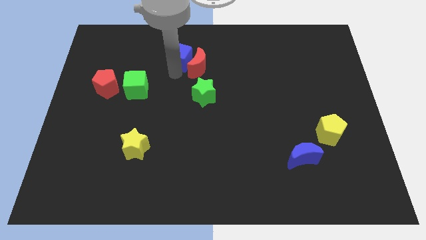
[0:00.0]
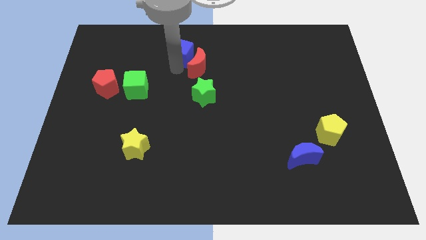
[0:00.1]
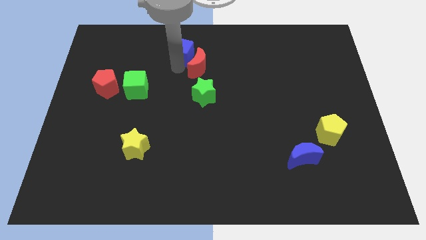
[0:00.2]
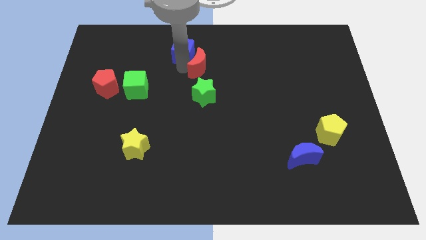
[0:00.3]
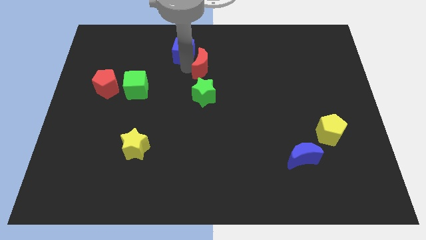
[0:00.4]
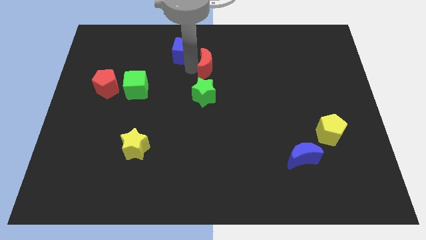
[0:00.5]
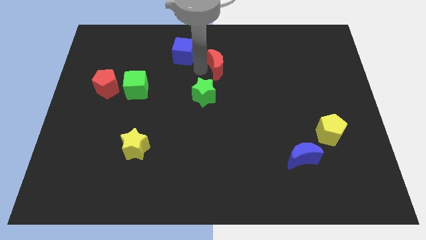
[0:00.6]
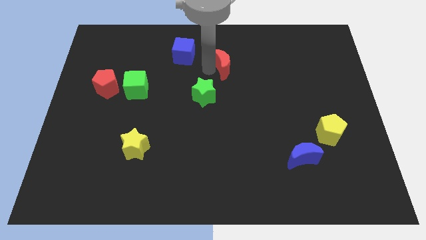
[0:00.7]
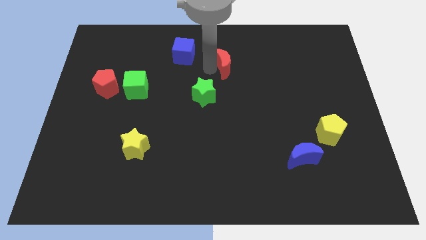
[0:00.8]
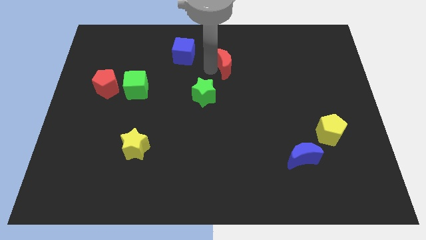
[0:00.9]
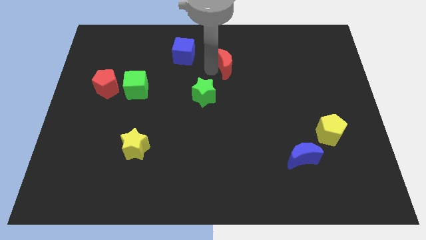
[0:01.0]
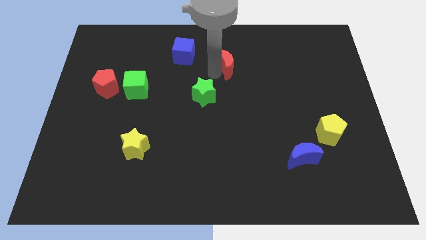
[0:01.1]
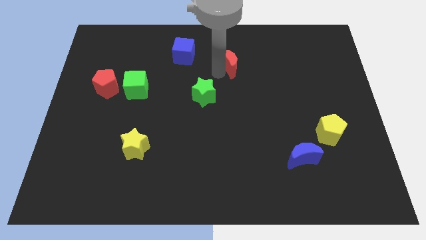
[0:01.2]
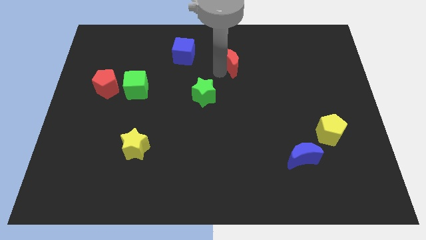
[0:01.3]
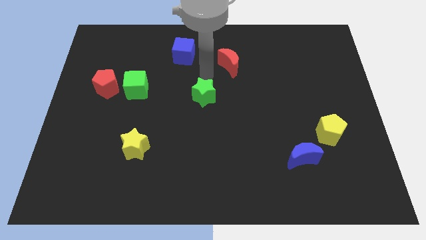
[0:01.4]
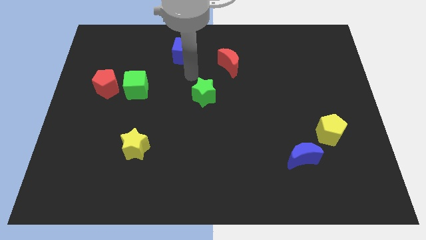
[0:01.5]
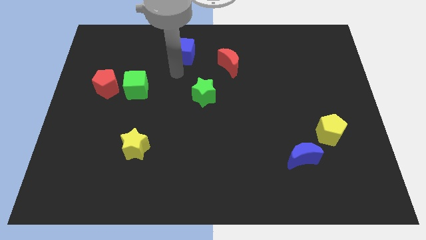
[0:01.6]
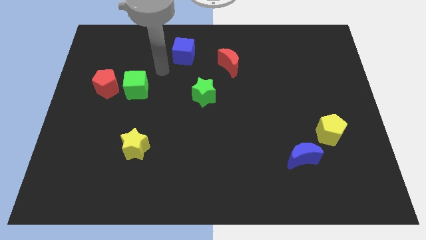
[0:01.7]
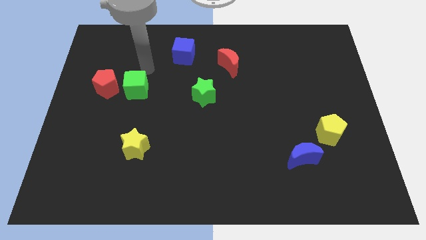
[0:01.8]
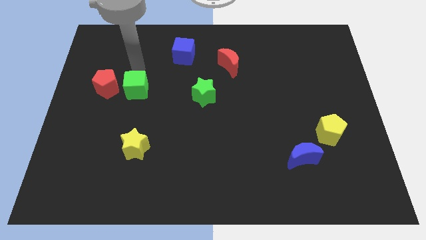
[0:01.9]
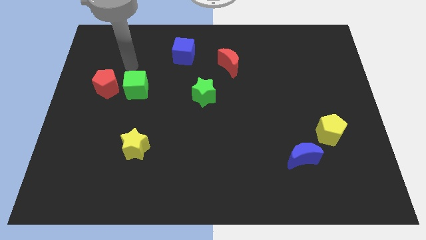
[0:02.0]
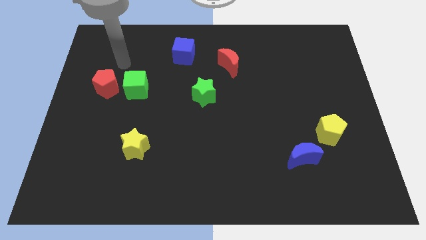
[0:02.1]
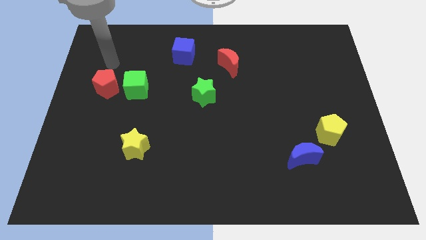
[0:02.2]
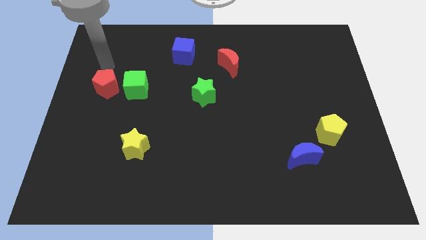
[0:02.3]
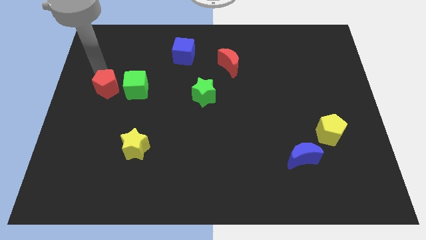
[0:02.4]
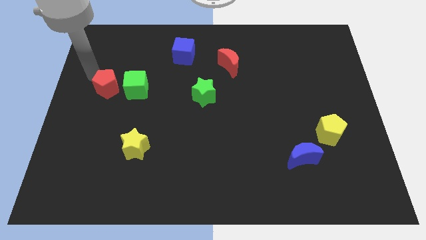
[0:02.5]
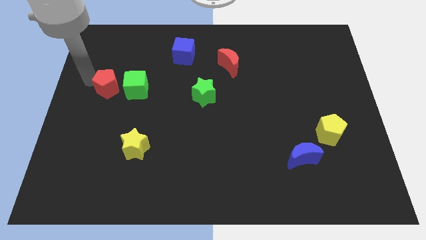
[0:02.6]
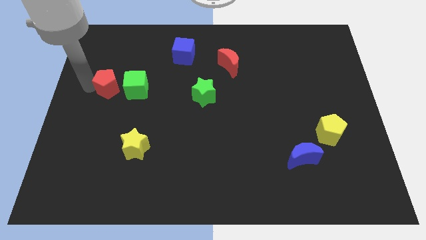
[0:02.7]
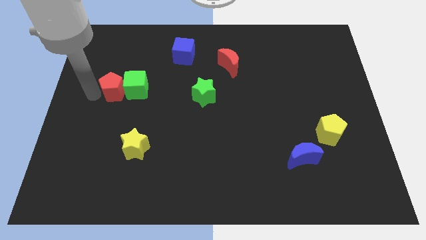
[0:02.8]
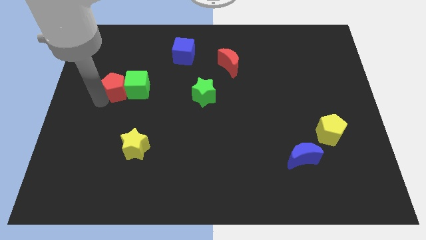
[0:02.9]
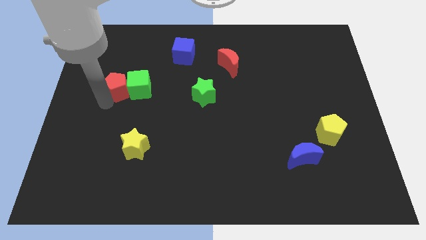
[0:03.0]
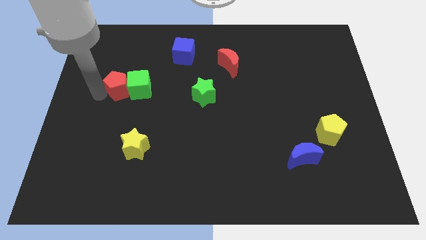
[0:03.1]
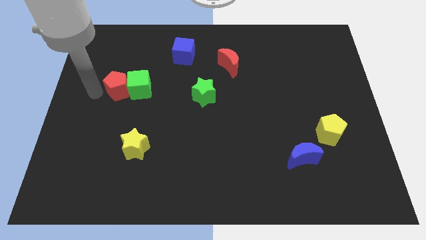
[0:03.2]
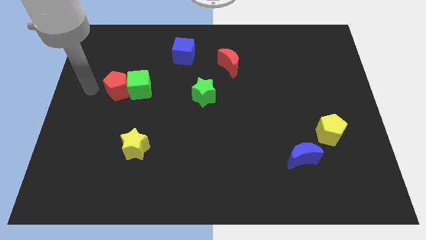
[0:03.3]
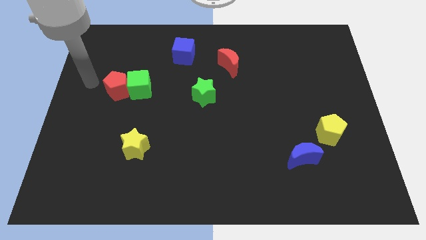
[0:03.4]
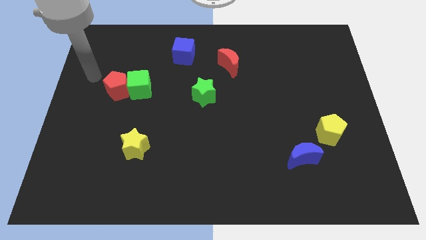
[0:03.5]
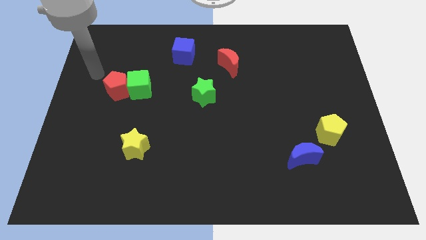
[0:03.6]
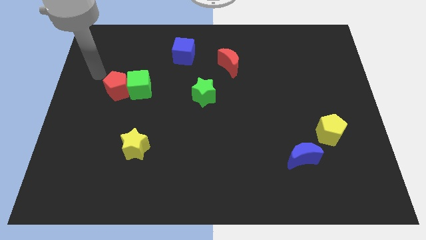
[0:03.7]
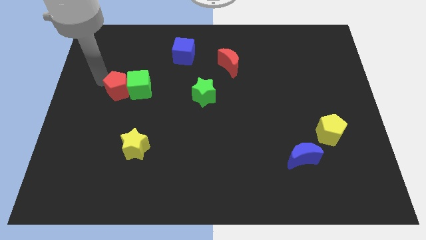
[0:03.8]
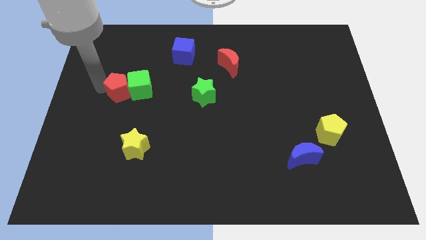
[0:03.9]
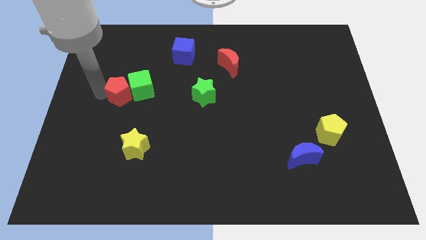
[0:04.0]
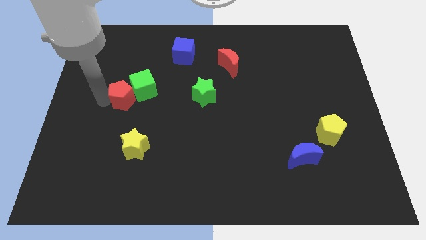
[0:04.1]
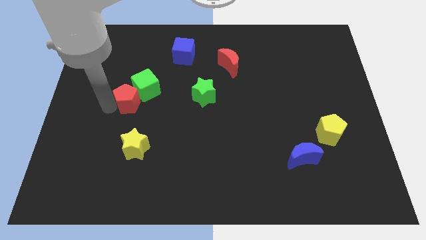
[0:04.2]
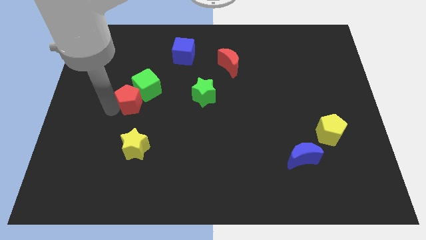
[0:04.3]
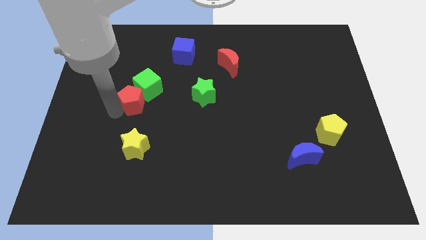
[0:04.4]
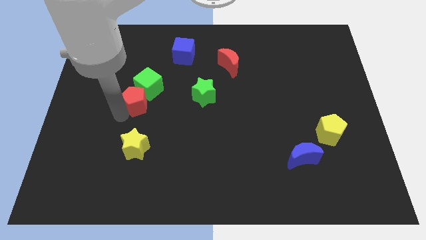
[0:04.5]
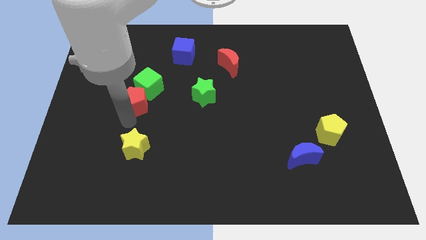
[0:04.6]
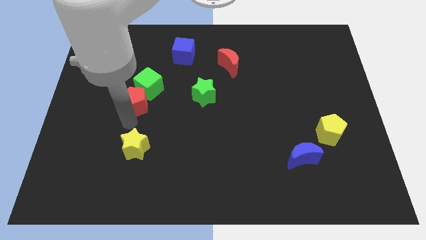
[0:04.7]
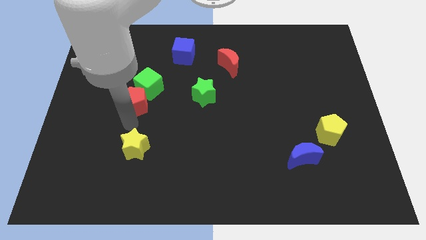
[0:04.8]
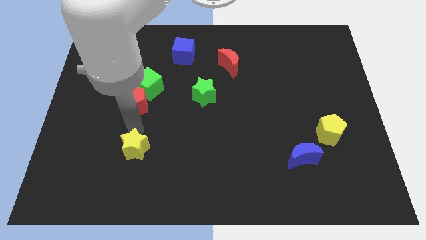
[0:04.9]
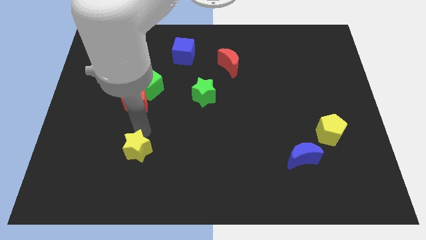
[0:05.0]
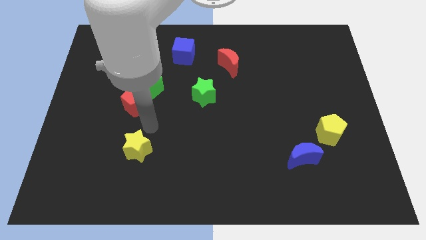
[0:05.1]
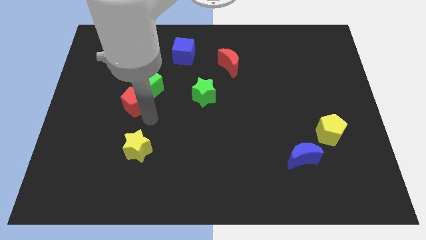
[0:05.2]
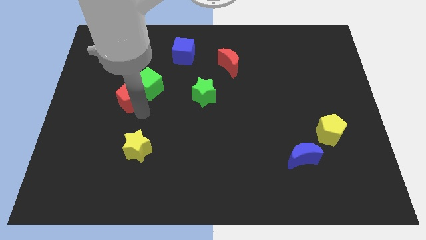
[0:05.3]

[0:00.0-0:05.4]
place the red moon diagonally to green star

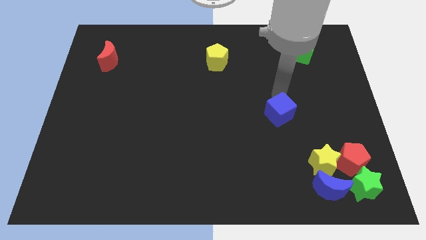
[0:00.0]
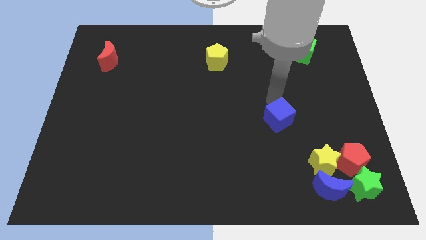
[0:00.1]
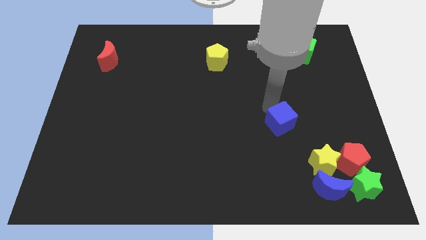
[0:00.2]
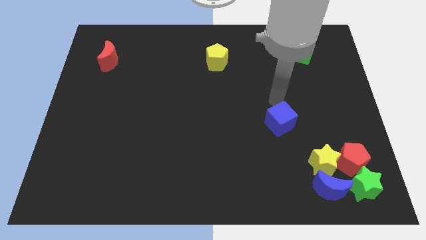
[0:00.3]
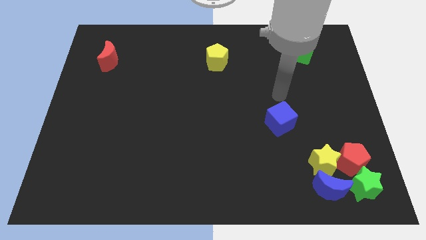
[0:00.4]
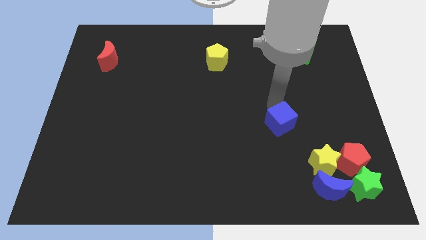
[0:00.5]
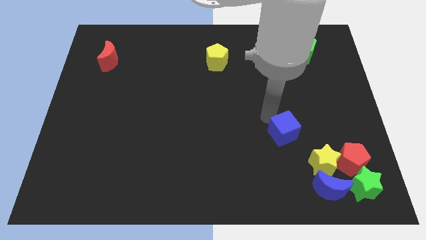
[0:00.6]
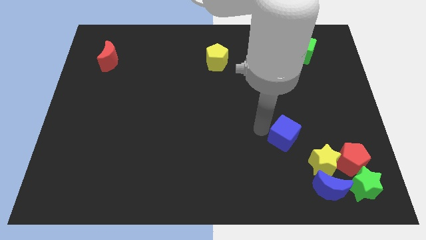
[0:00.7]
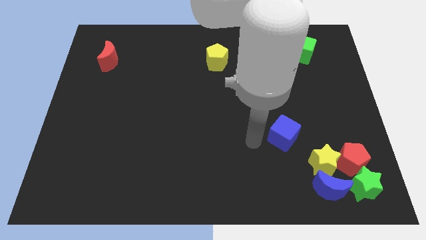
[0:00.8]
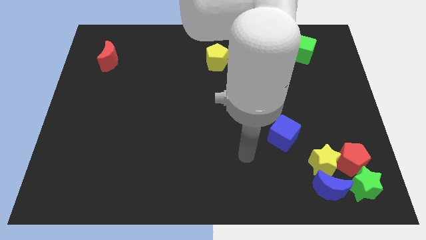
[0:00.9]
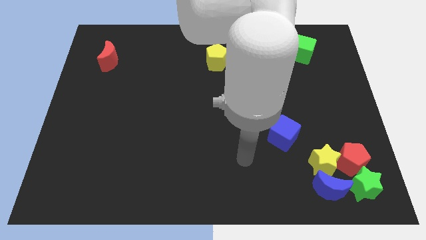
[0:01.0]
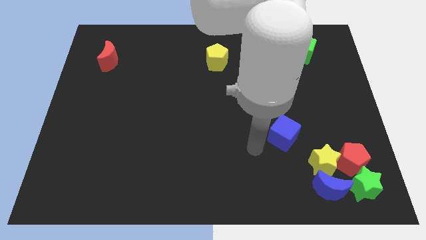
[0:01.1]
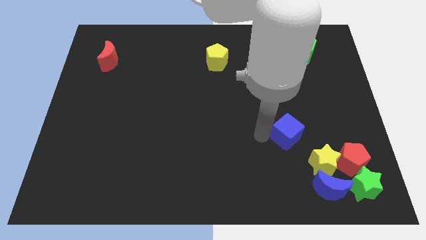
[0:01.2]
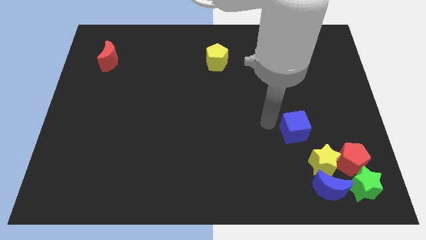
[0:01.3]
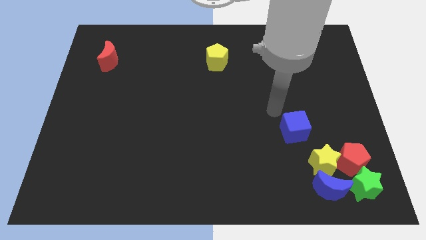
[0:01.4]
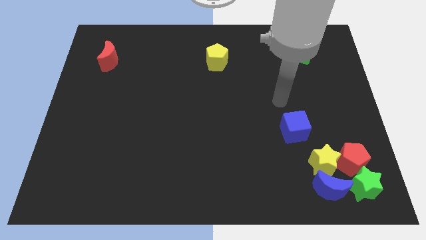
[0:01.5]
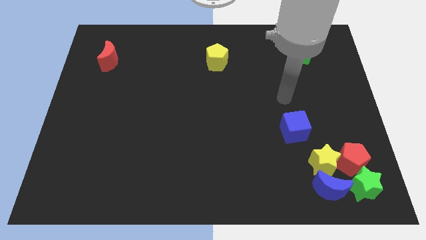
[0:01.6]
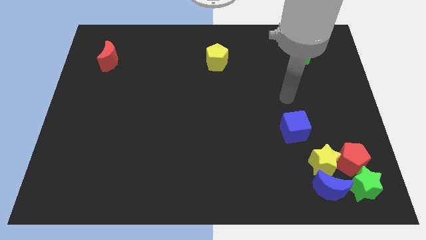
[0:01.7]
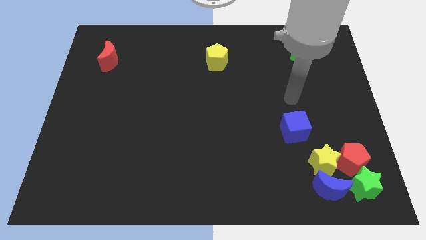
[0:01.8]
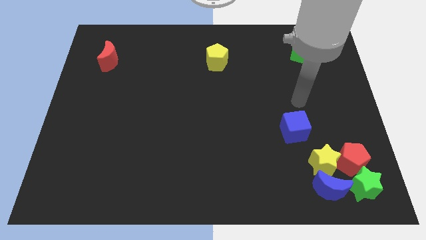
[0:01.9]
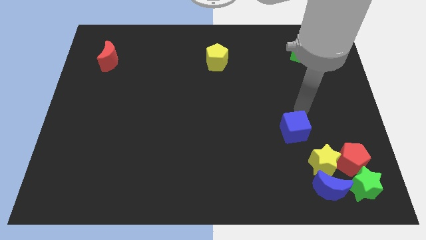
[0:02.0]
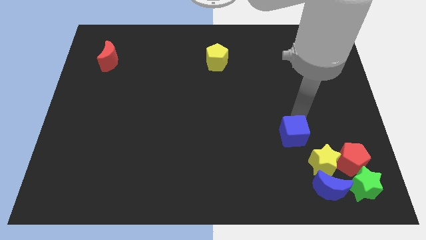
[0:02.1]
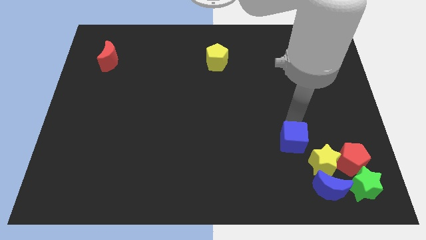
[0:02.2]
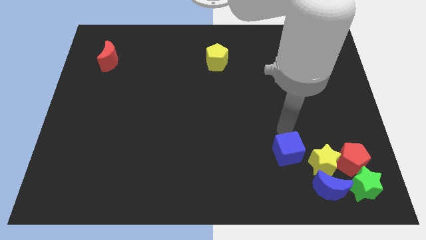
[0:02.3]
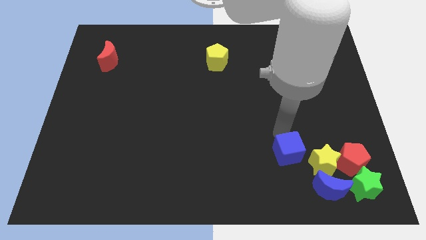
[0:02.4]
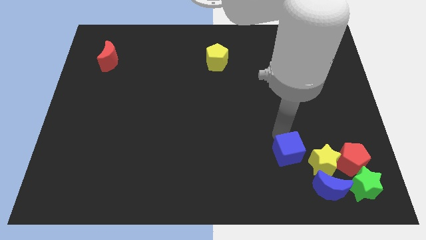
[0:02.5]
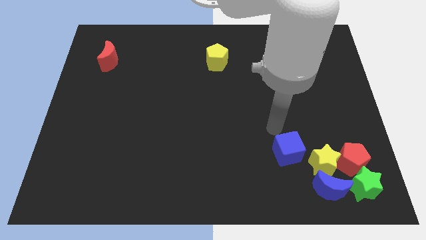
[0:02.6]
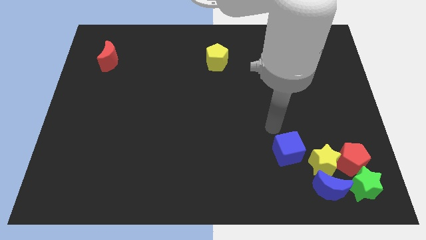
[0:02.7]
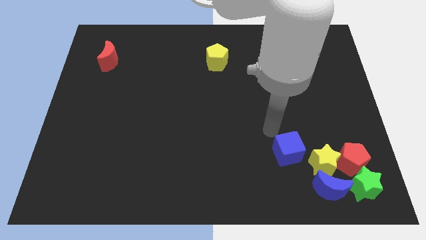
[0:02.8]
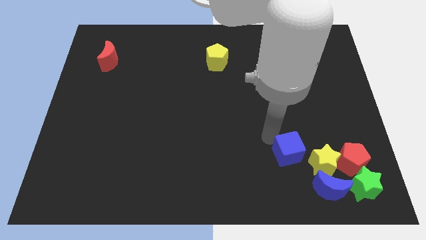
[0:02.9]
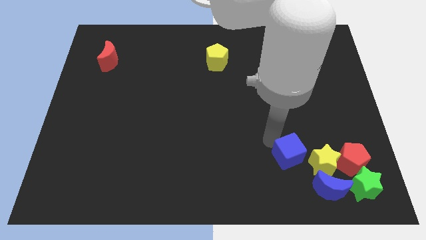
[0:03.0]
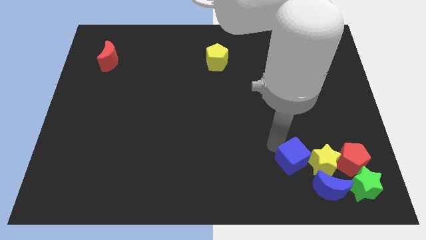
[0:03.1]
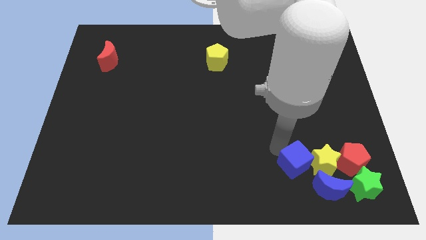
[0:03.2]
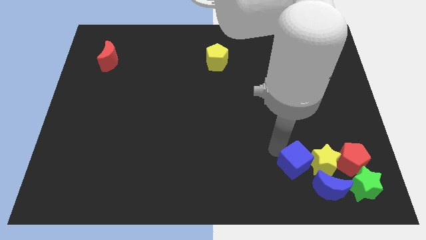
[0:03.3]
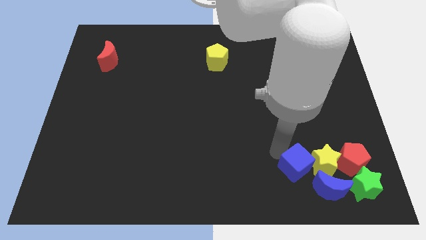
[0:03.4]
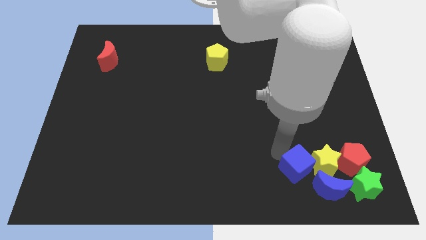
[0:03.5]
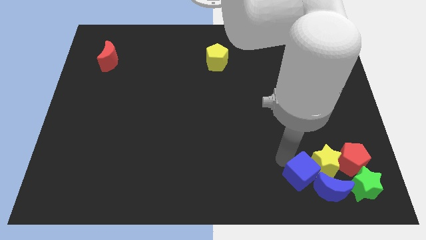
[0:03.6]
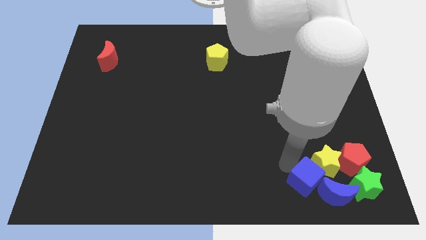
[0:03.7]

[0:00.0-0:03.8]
move the blue cube towards the left side of the yellow star

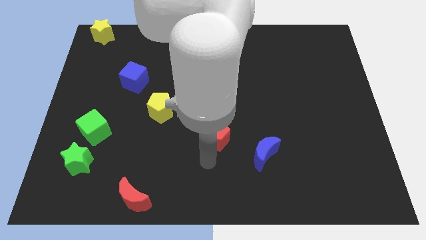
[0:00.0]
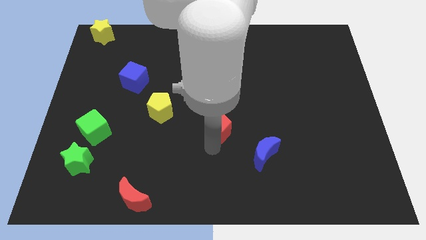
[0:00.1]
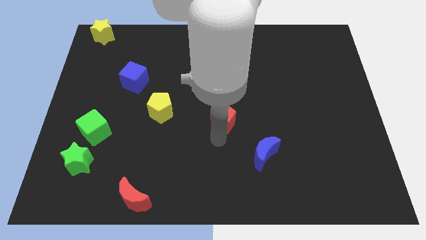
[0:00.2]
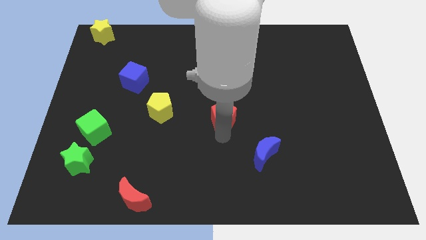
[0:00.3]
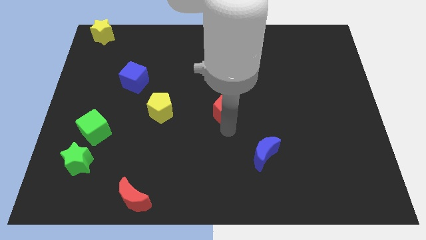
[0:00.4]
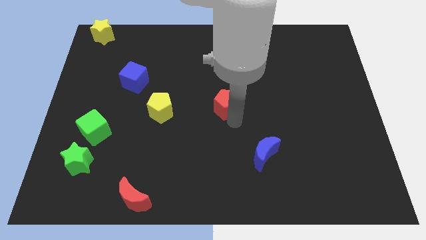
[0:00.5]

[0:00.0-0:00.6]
place the red pentagon to the right of the yellow pentagon
